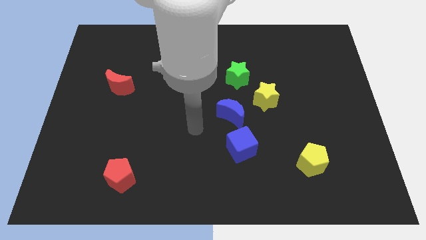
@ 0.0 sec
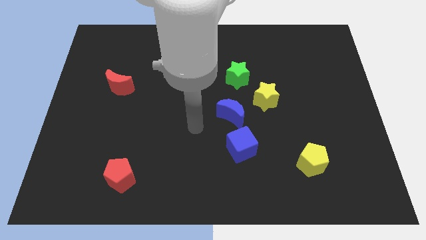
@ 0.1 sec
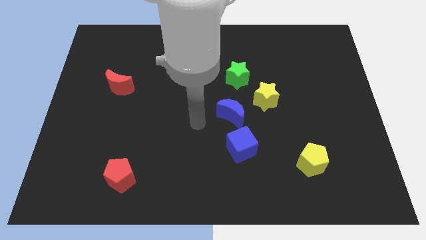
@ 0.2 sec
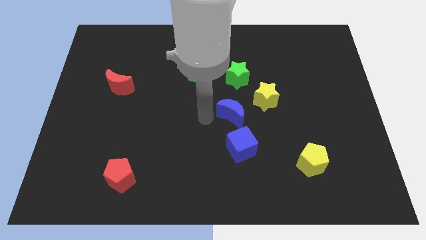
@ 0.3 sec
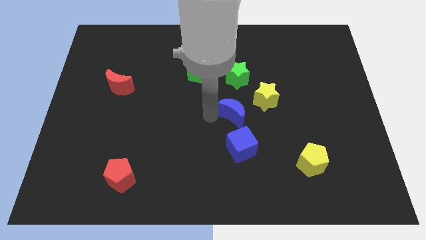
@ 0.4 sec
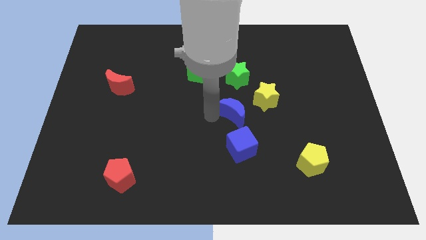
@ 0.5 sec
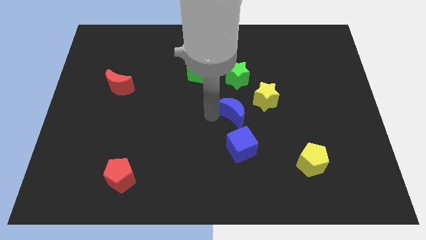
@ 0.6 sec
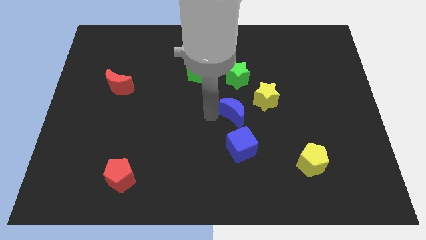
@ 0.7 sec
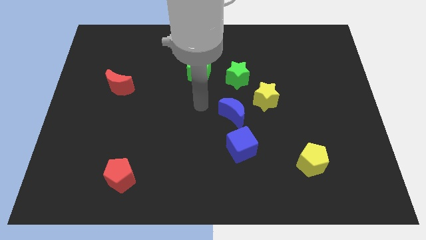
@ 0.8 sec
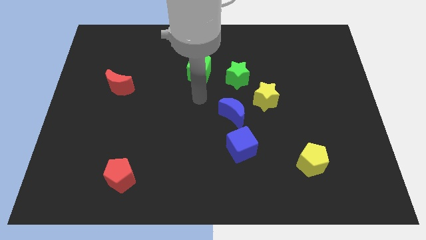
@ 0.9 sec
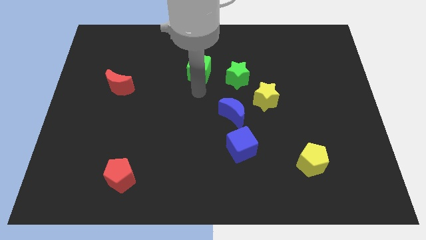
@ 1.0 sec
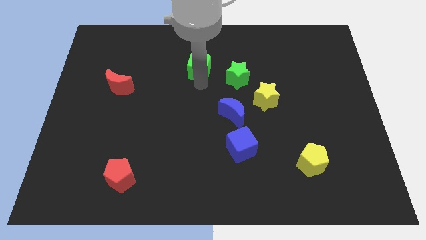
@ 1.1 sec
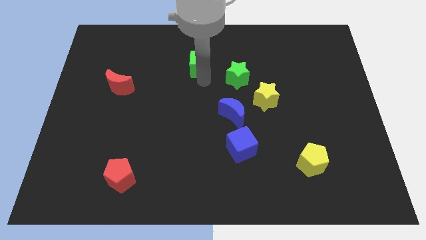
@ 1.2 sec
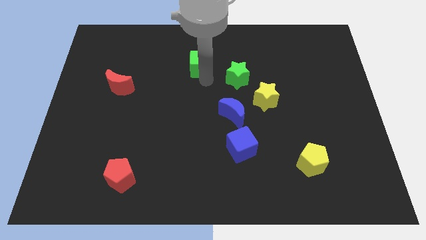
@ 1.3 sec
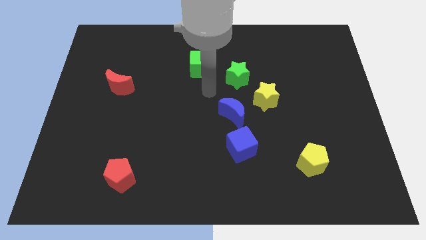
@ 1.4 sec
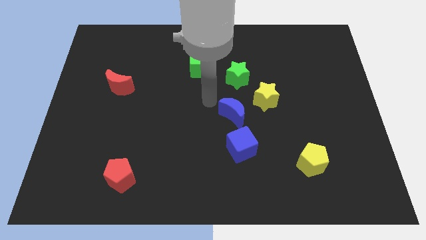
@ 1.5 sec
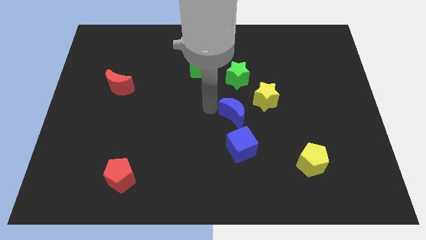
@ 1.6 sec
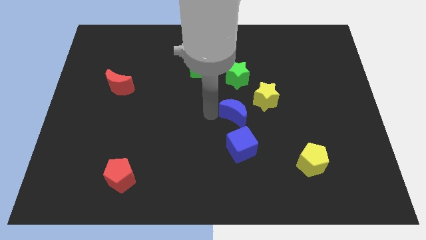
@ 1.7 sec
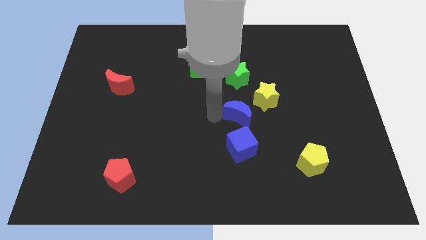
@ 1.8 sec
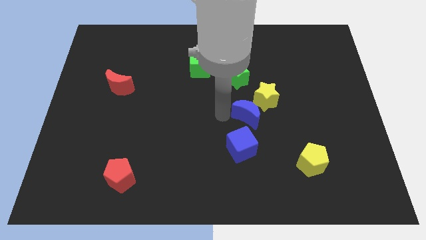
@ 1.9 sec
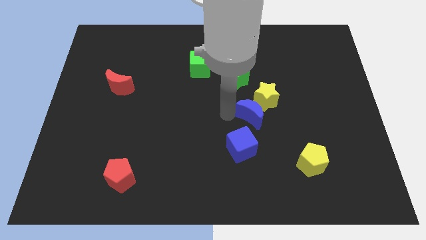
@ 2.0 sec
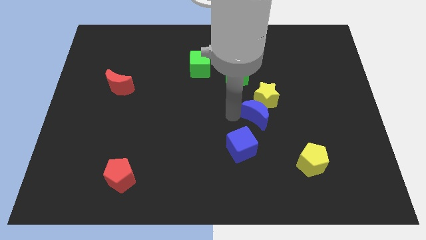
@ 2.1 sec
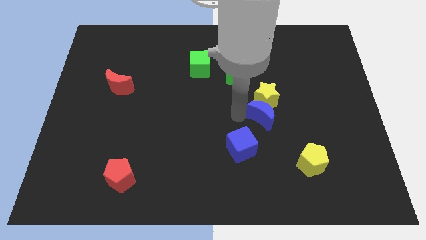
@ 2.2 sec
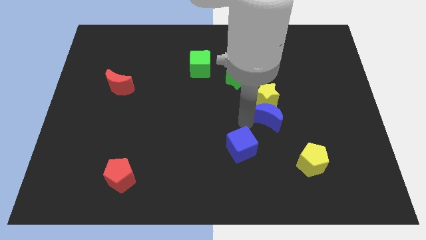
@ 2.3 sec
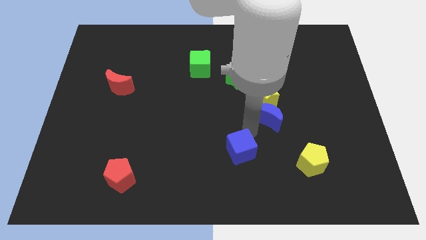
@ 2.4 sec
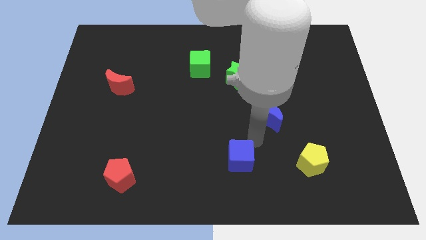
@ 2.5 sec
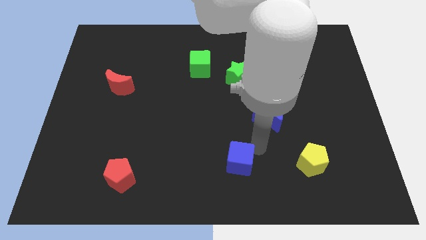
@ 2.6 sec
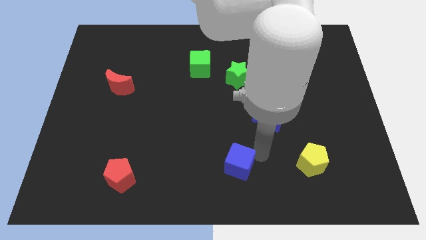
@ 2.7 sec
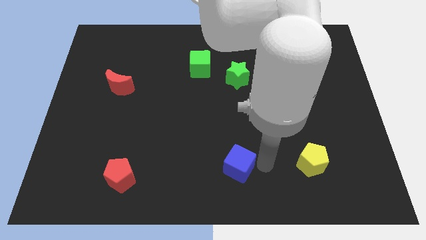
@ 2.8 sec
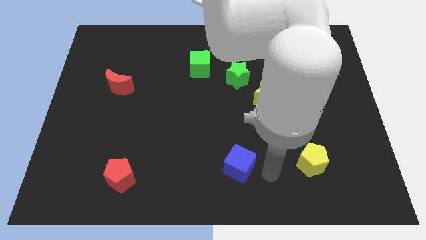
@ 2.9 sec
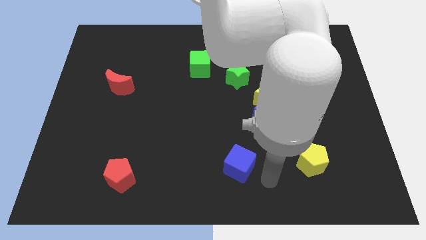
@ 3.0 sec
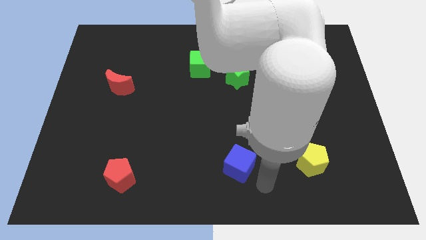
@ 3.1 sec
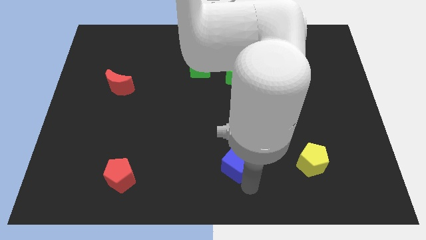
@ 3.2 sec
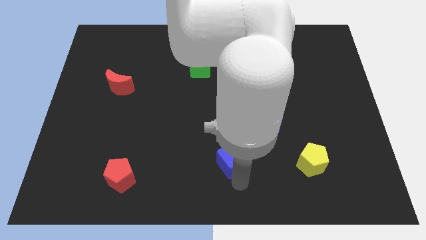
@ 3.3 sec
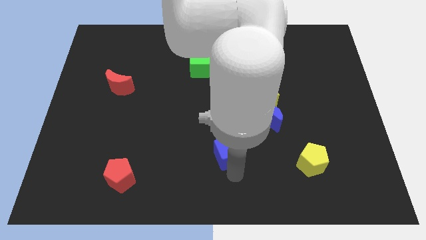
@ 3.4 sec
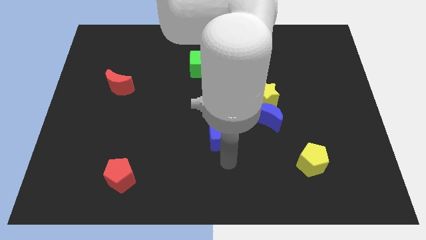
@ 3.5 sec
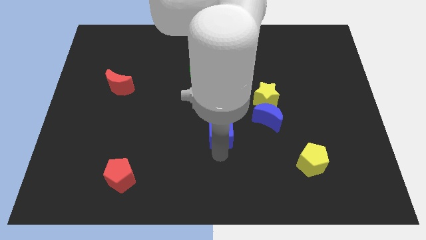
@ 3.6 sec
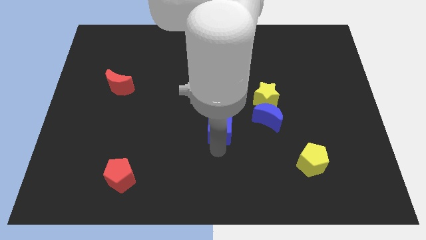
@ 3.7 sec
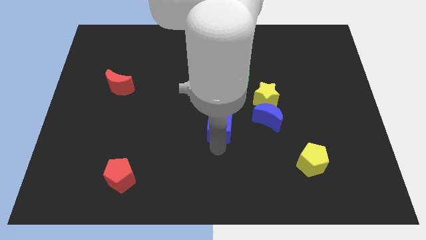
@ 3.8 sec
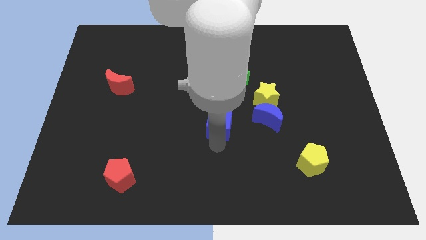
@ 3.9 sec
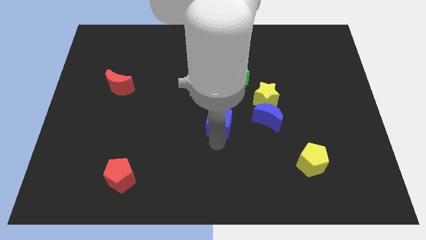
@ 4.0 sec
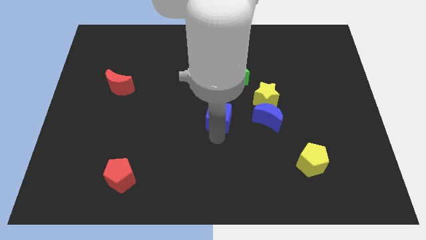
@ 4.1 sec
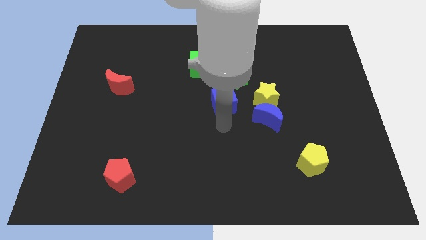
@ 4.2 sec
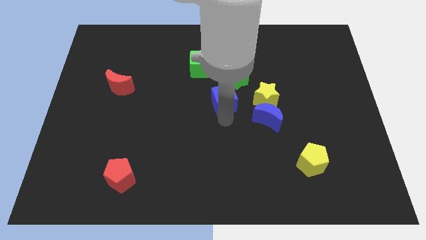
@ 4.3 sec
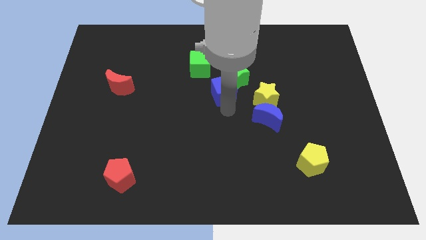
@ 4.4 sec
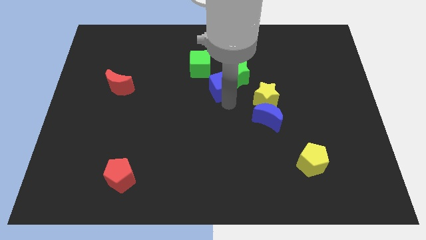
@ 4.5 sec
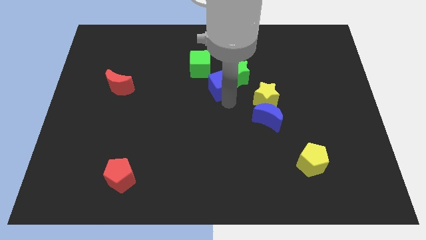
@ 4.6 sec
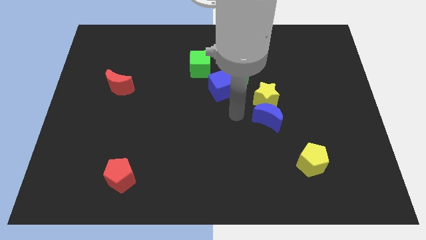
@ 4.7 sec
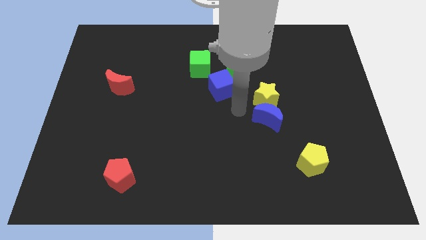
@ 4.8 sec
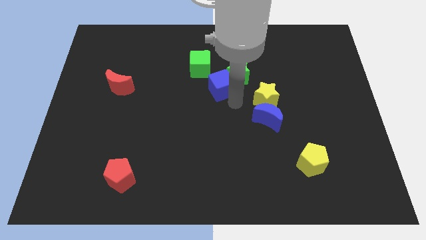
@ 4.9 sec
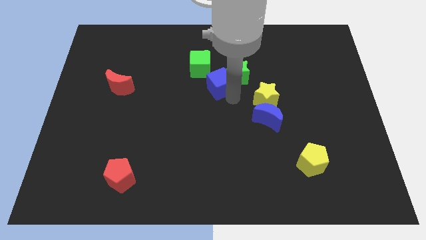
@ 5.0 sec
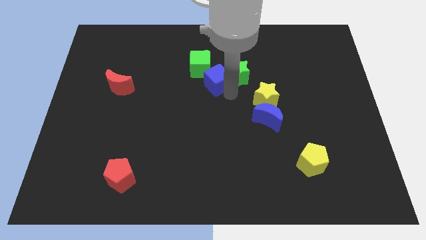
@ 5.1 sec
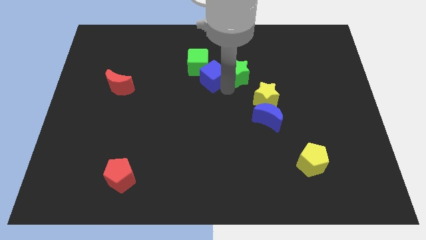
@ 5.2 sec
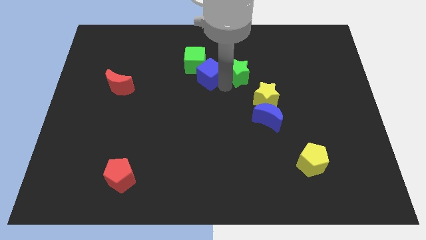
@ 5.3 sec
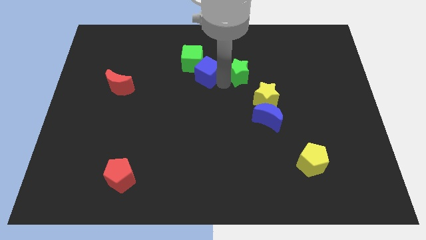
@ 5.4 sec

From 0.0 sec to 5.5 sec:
move the blue cube towards the green cube

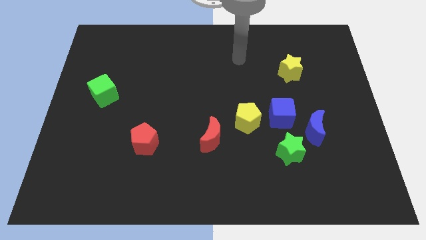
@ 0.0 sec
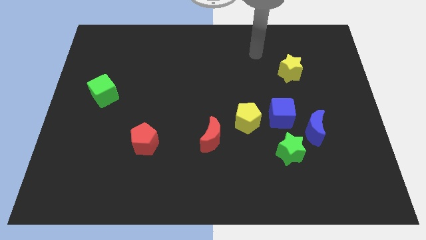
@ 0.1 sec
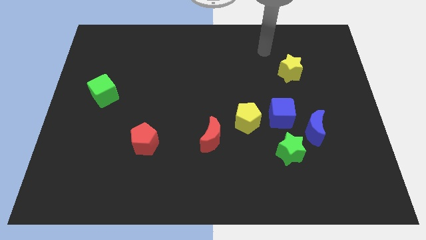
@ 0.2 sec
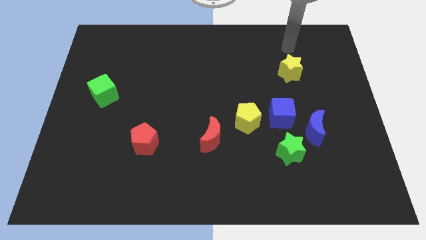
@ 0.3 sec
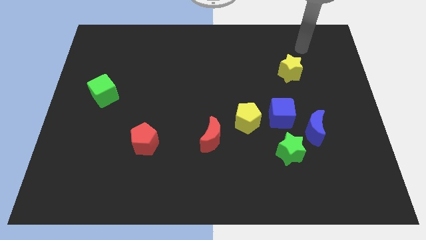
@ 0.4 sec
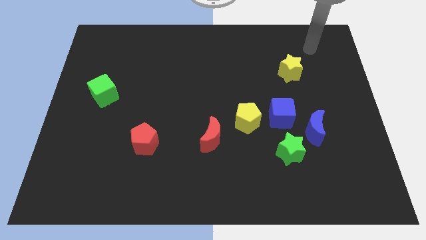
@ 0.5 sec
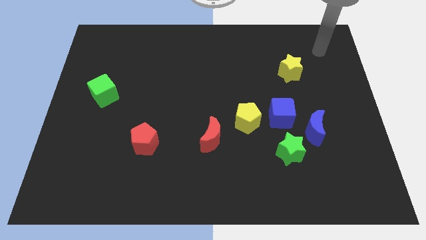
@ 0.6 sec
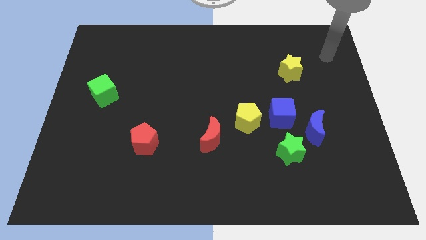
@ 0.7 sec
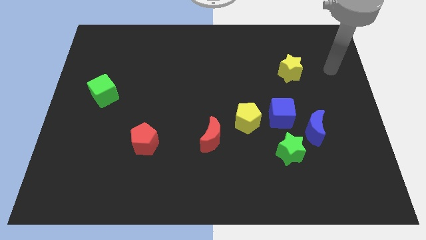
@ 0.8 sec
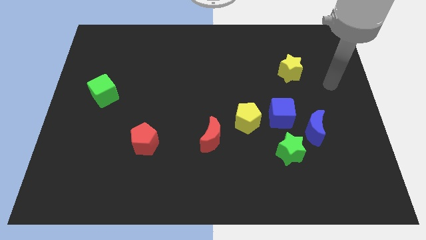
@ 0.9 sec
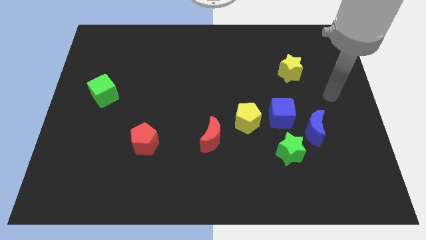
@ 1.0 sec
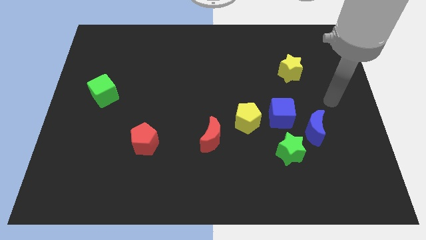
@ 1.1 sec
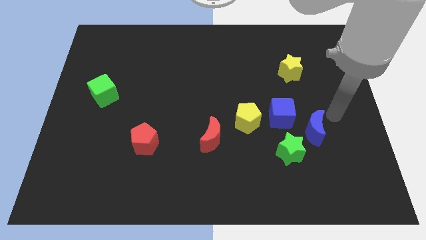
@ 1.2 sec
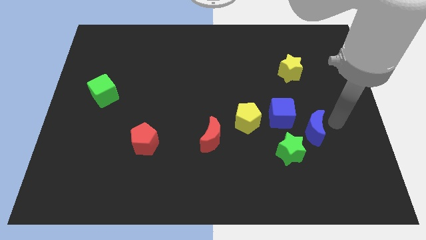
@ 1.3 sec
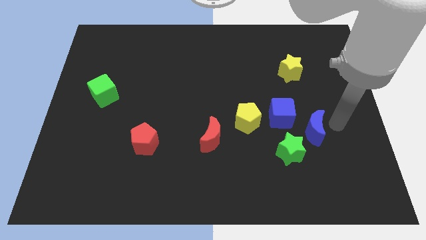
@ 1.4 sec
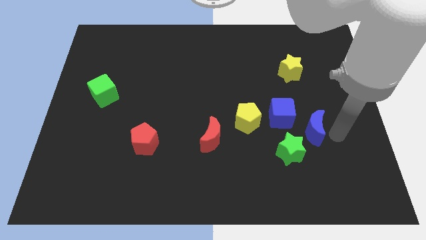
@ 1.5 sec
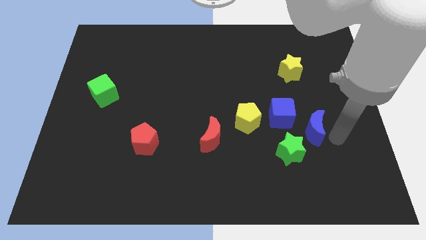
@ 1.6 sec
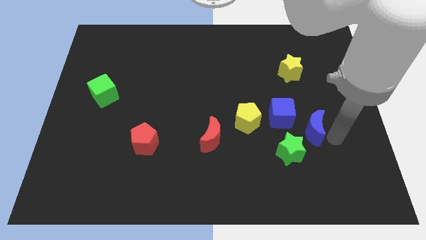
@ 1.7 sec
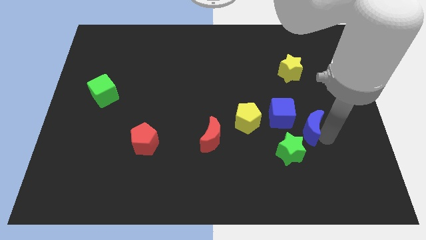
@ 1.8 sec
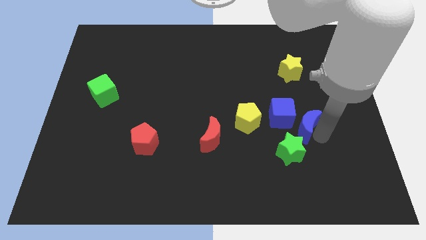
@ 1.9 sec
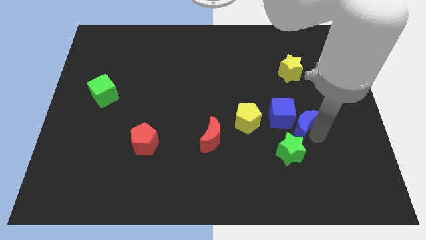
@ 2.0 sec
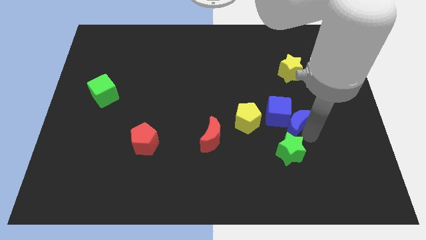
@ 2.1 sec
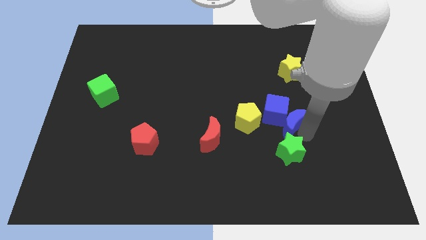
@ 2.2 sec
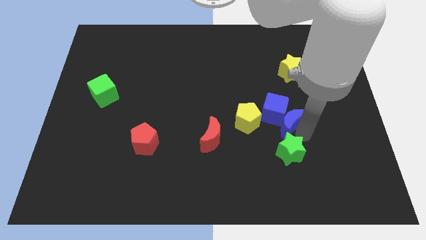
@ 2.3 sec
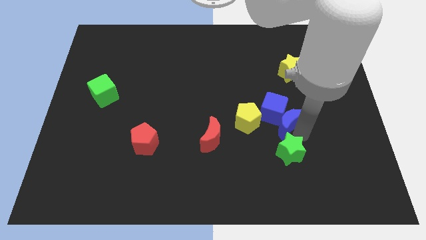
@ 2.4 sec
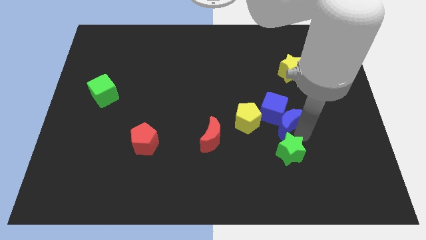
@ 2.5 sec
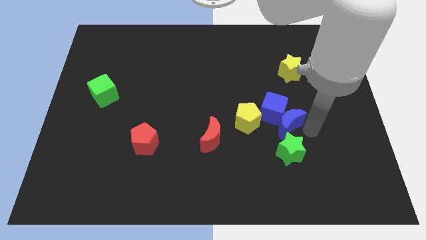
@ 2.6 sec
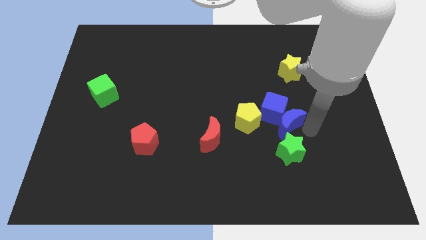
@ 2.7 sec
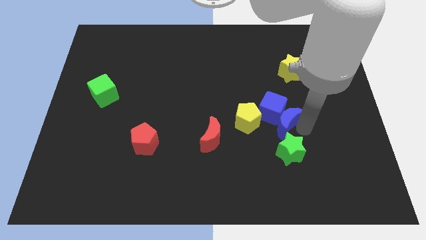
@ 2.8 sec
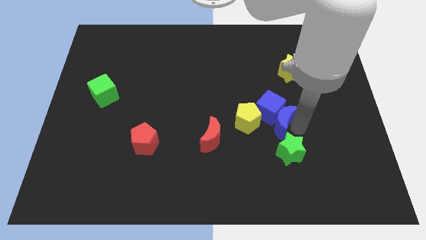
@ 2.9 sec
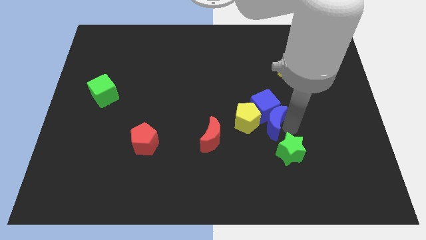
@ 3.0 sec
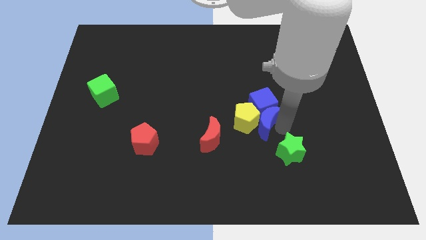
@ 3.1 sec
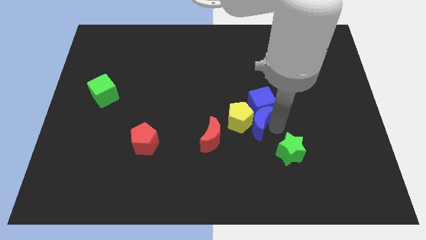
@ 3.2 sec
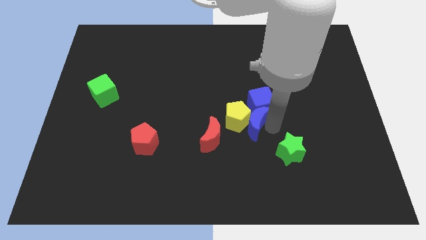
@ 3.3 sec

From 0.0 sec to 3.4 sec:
put the blue moon to the yellow pentagon
